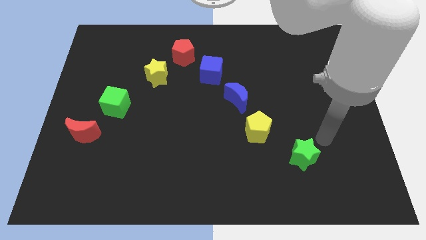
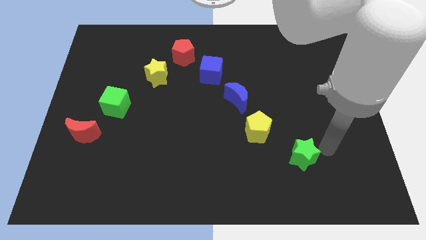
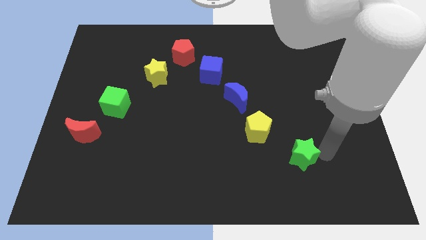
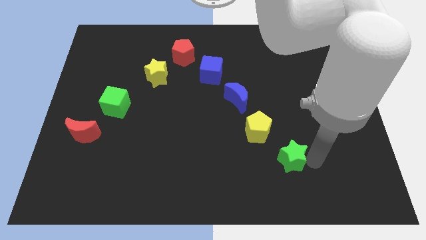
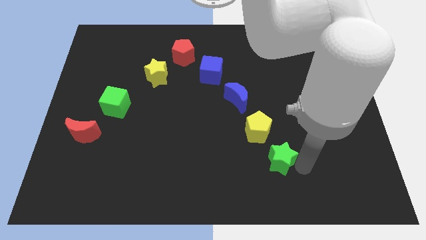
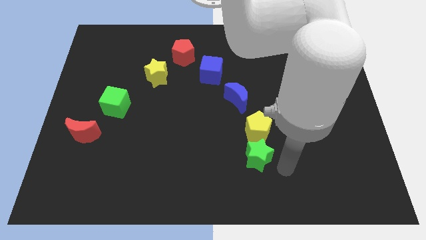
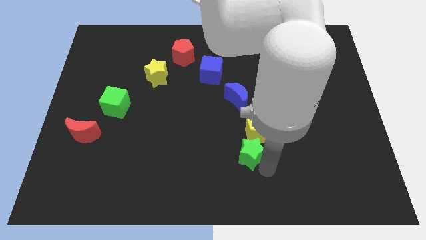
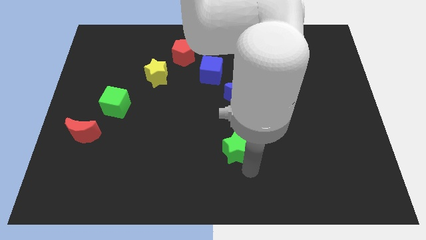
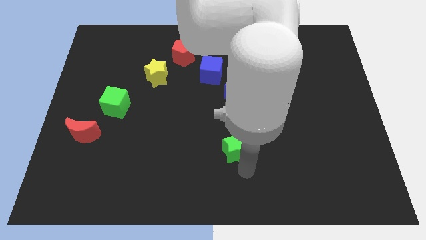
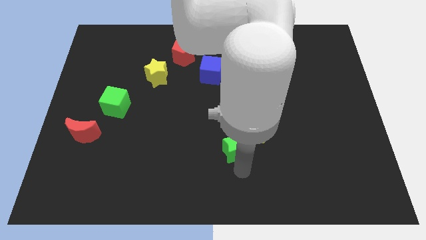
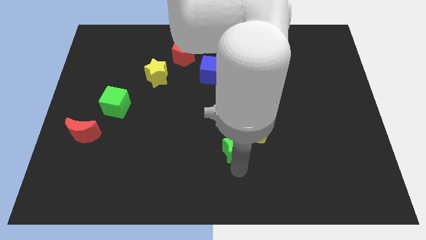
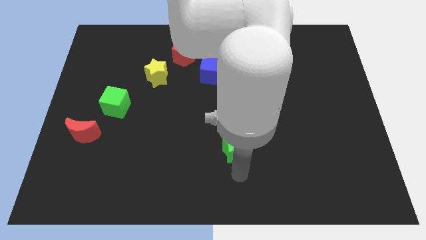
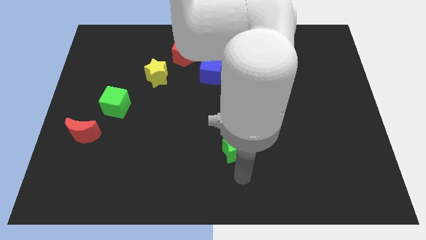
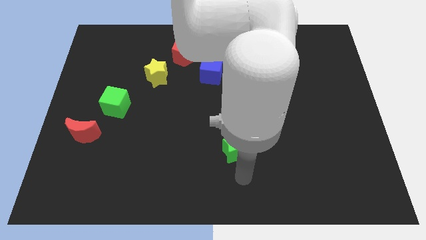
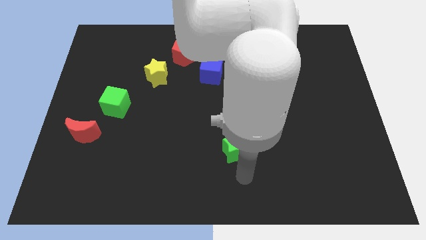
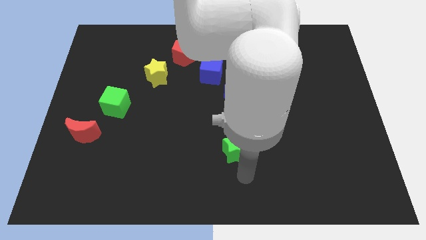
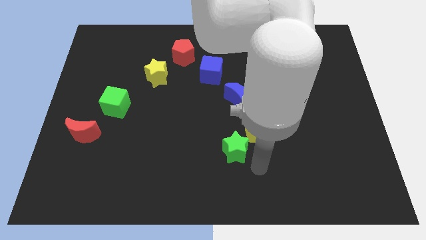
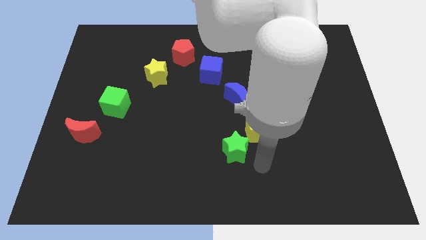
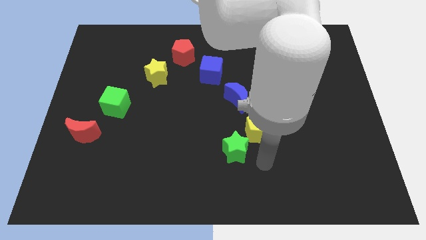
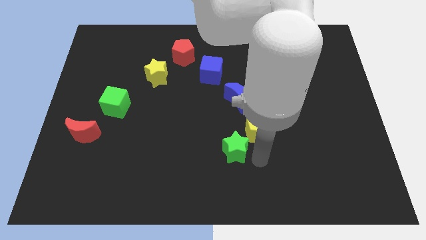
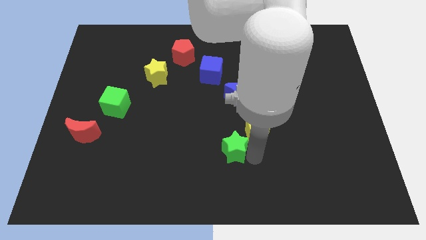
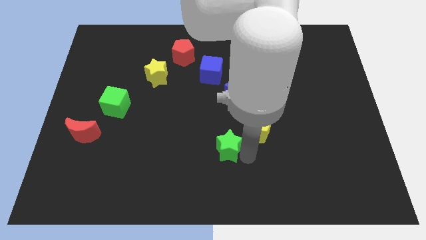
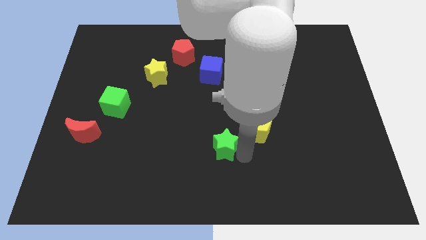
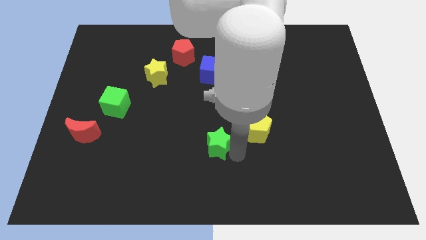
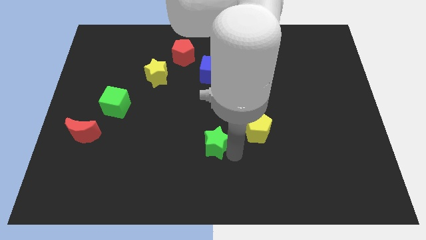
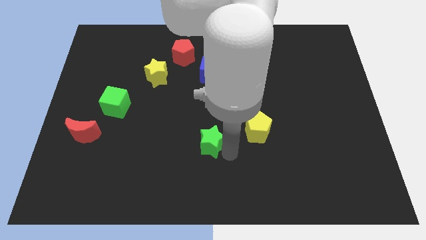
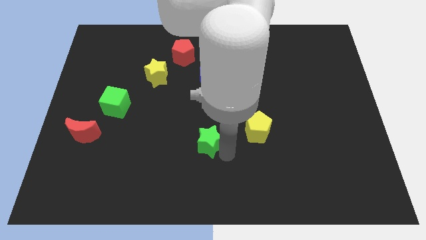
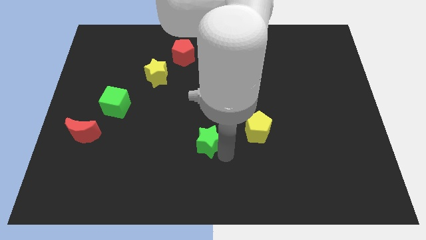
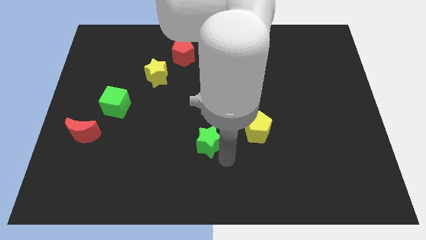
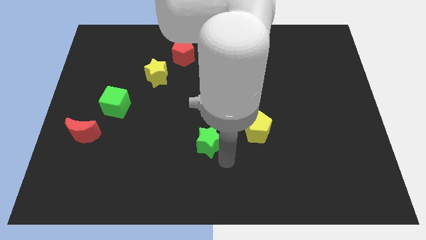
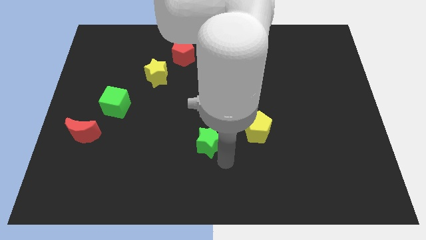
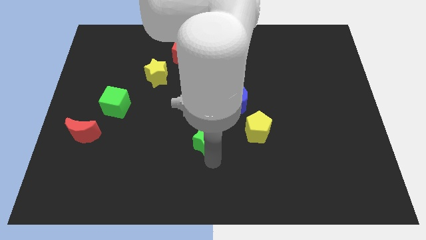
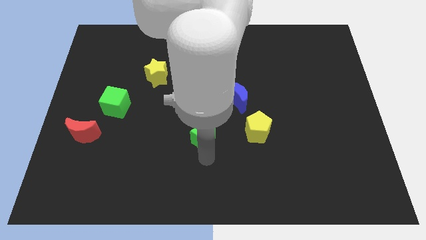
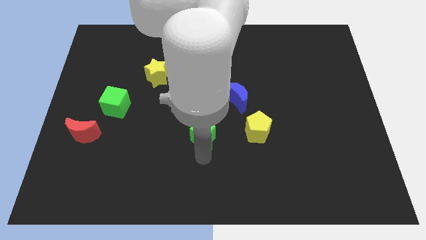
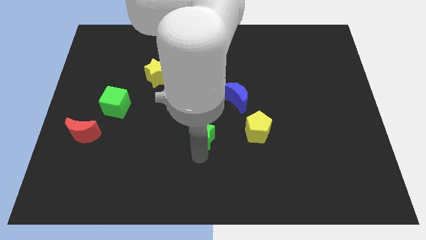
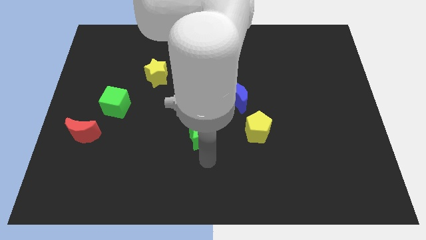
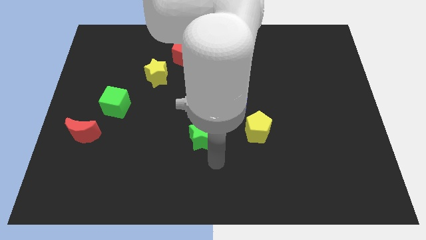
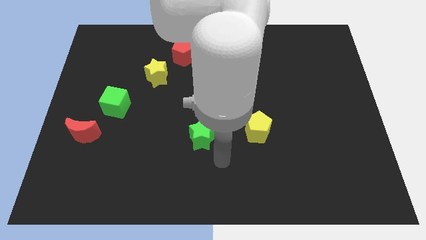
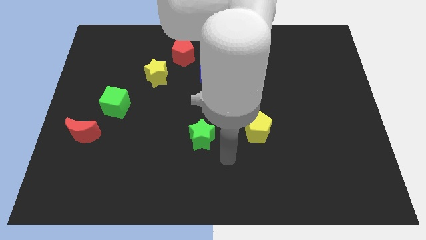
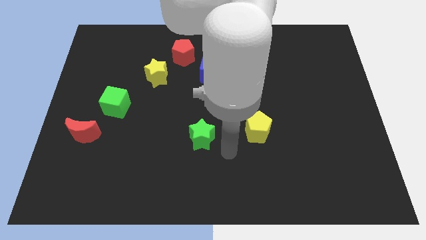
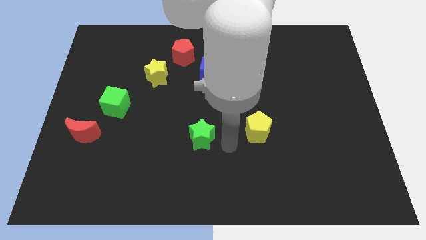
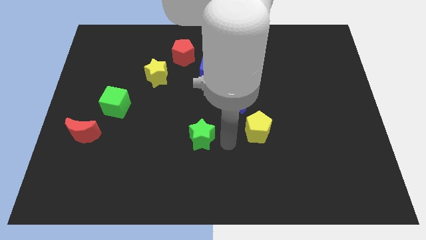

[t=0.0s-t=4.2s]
place the green star below the yellow star

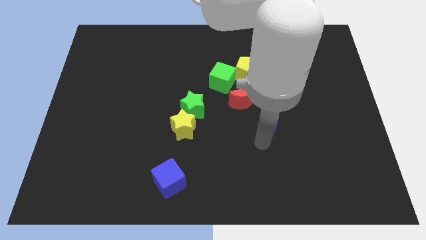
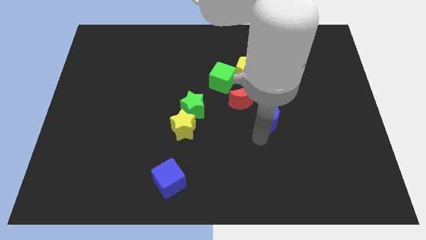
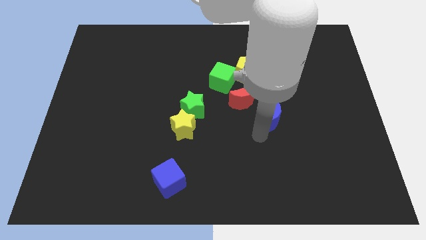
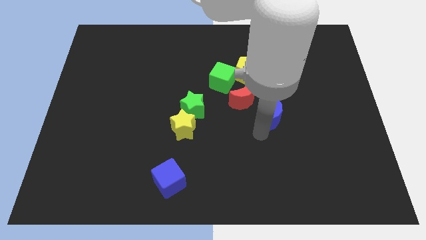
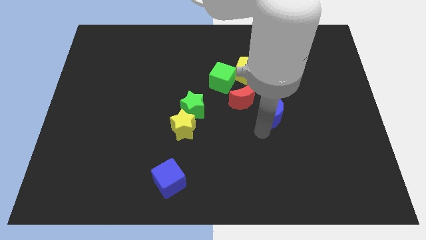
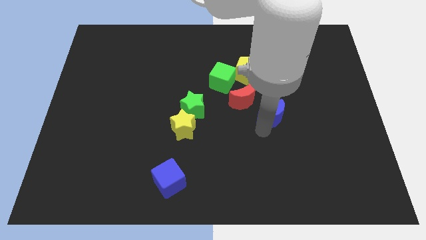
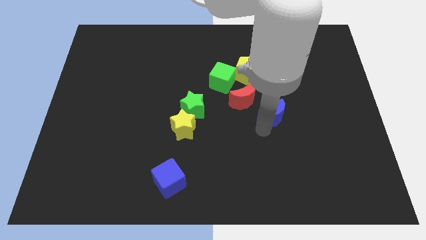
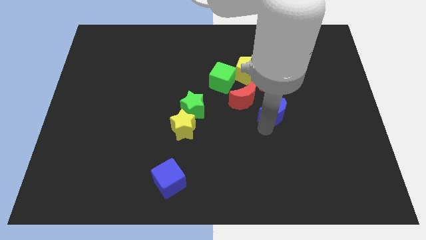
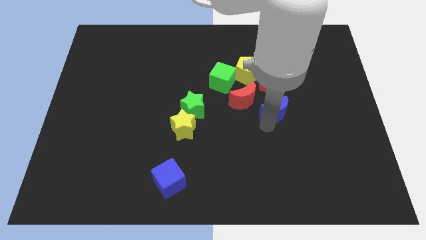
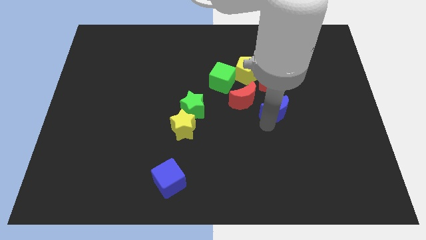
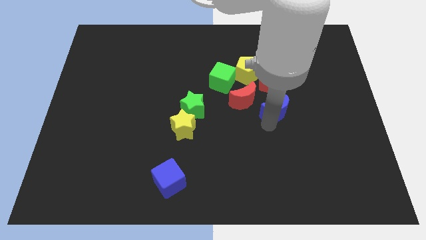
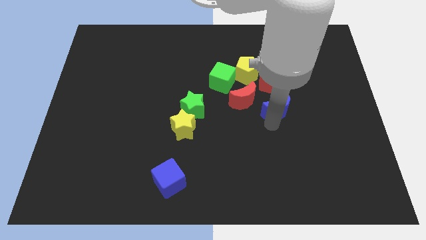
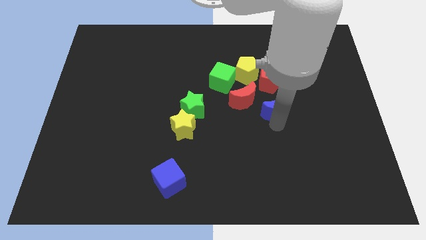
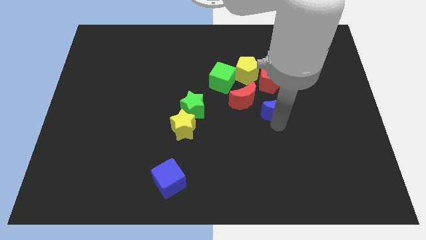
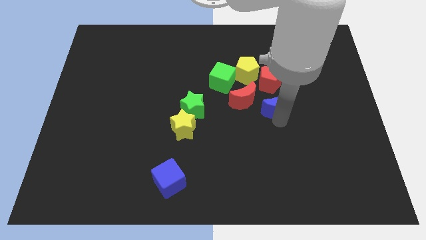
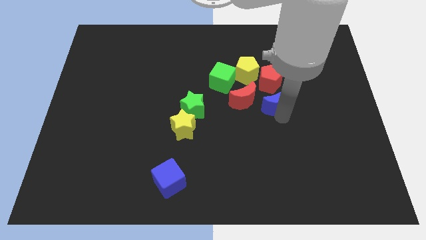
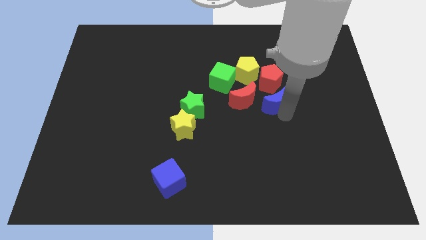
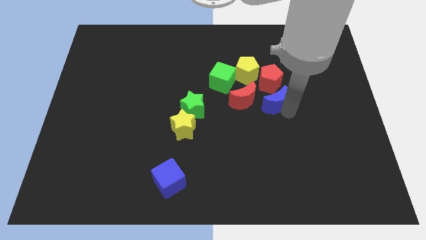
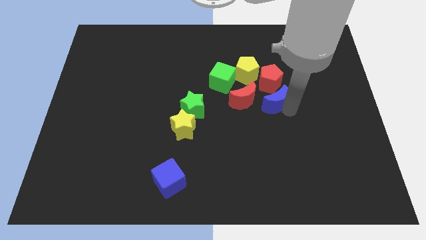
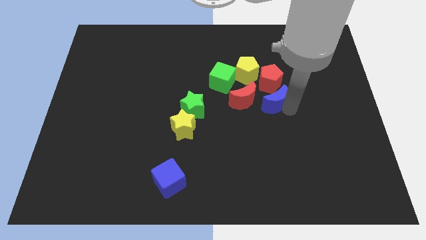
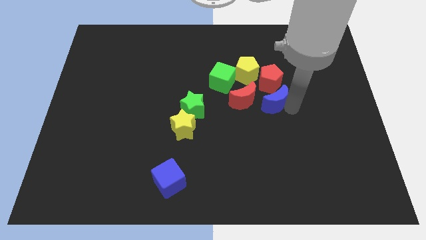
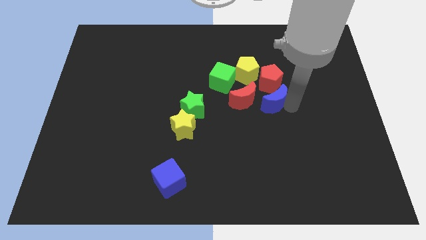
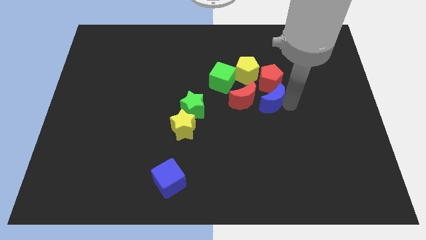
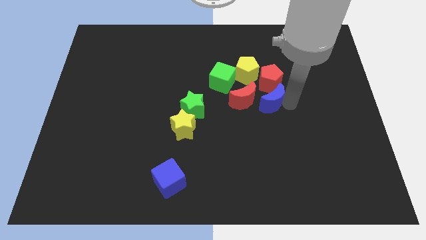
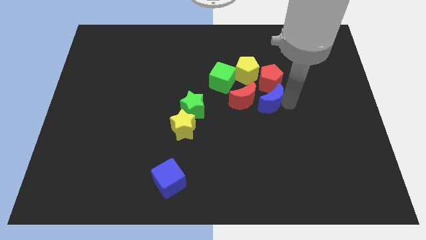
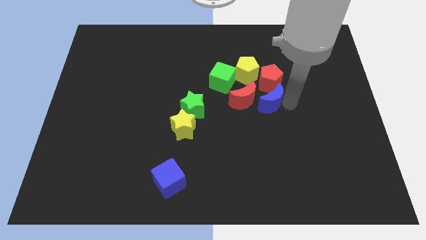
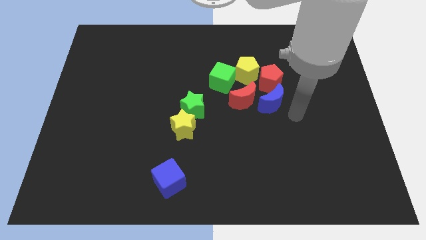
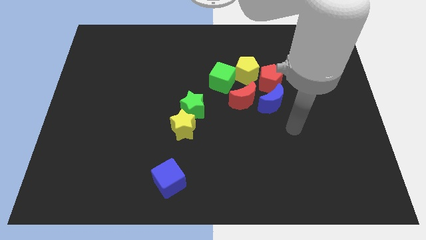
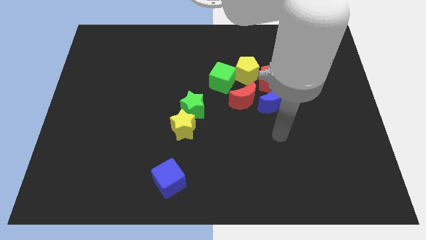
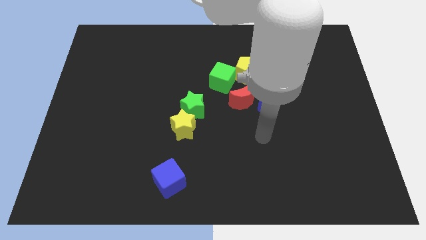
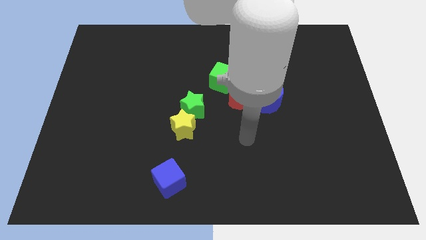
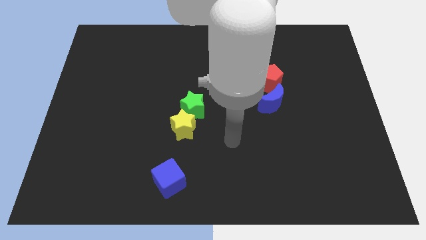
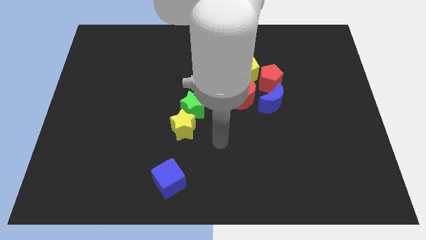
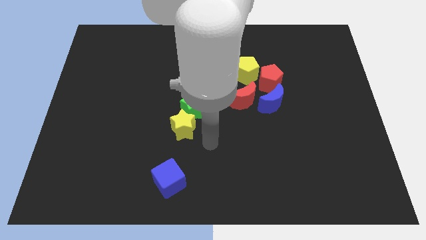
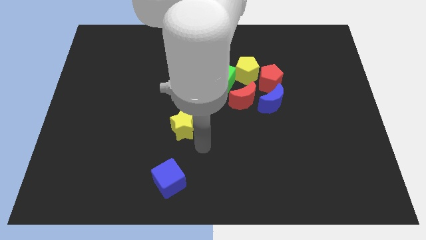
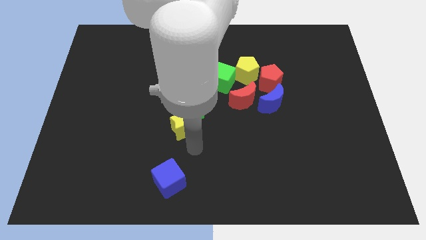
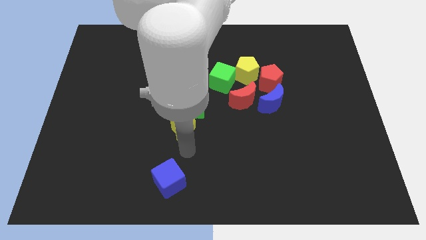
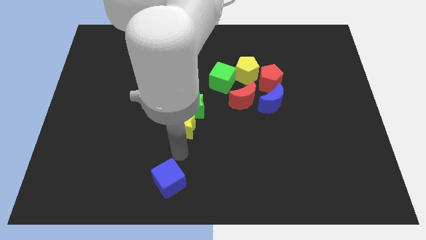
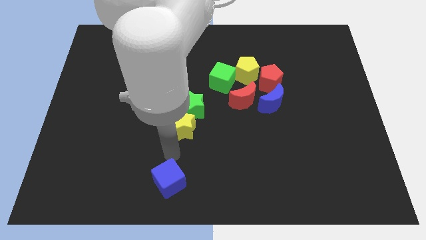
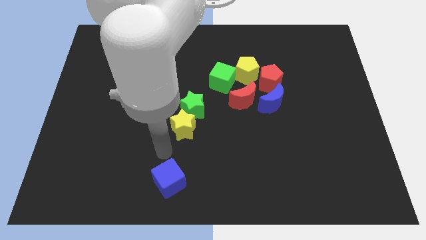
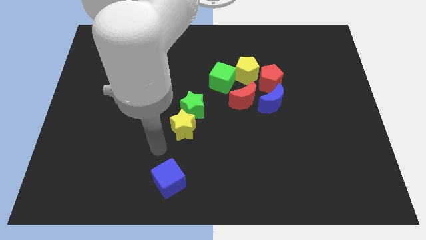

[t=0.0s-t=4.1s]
place the blue crescent below the red pentagon

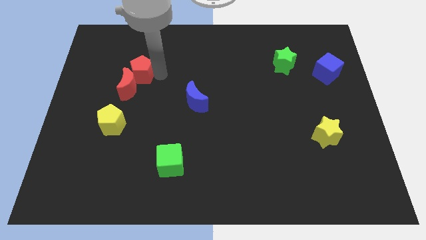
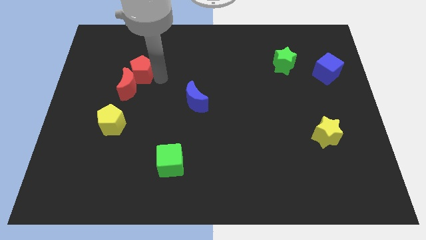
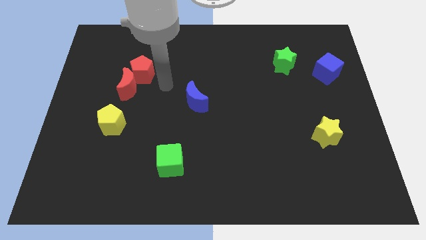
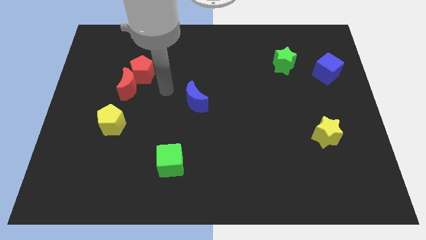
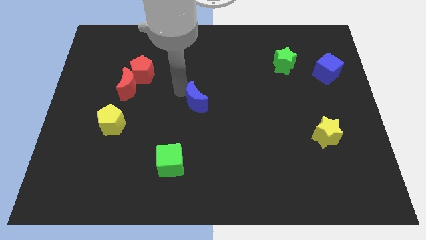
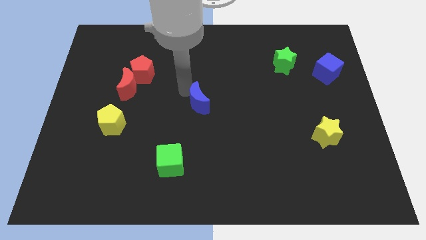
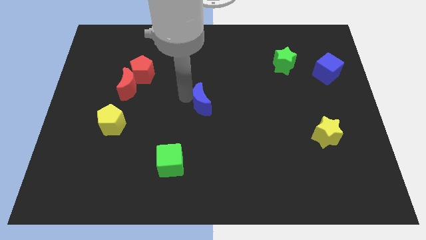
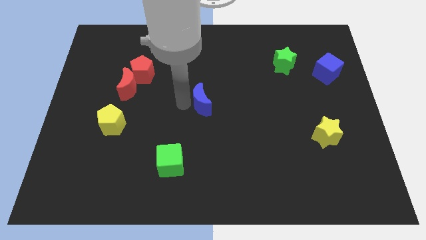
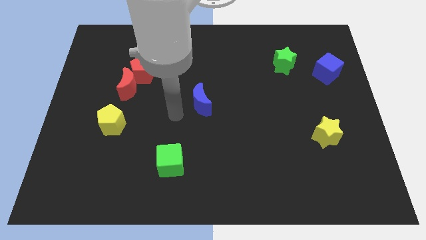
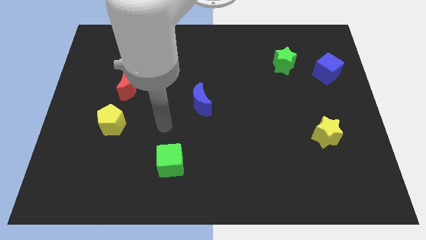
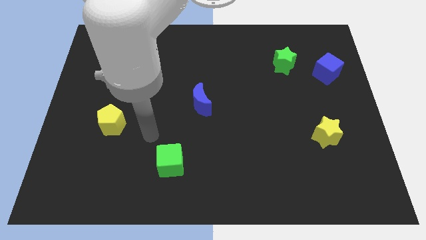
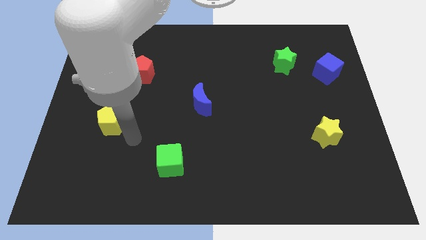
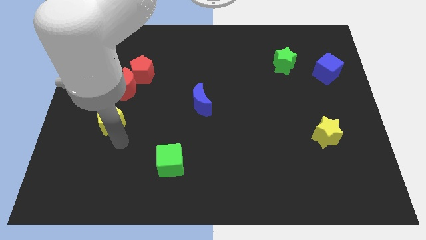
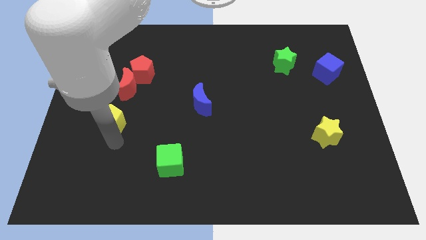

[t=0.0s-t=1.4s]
slightly move the blue moon to the right side
